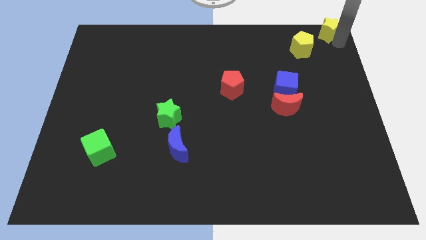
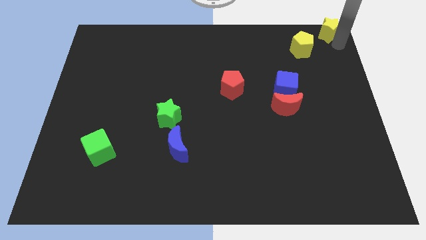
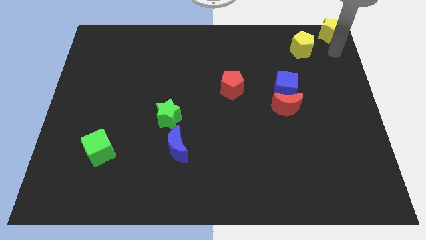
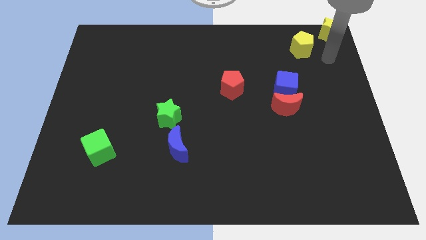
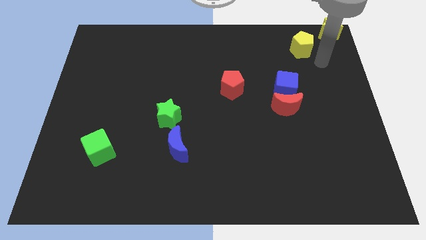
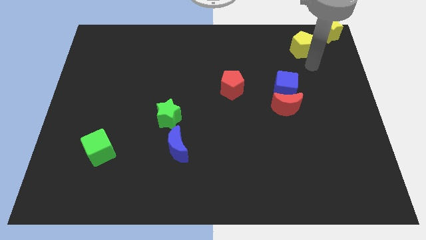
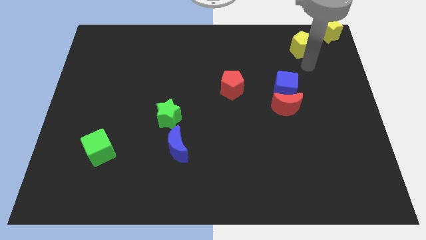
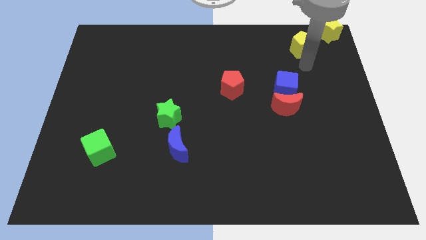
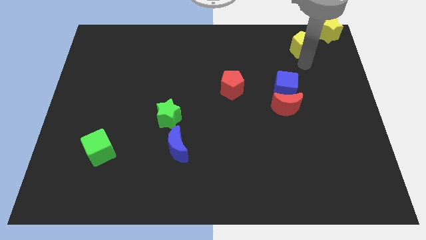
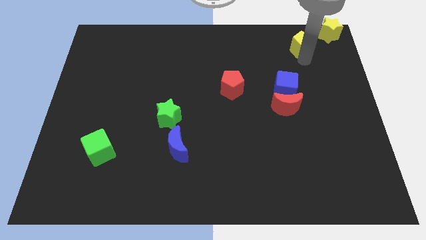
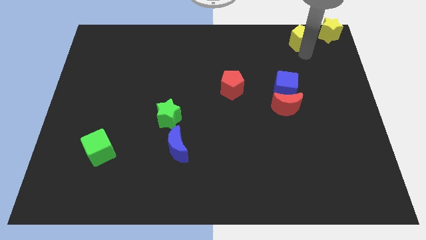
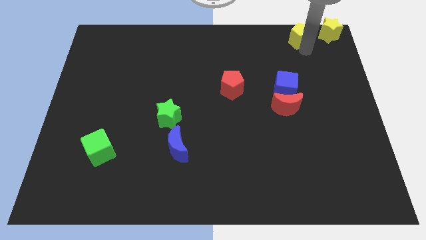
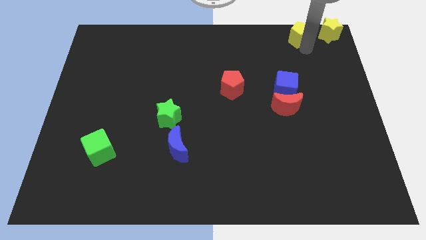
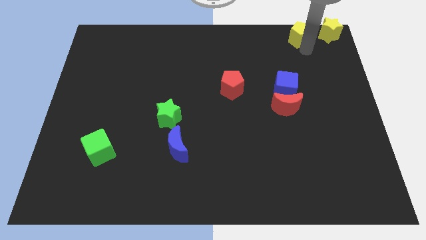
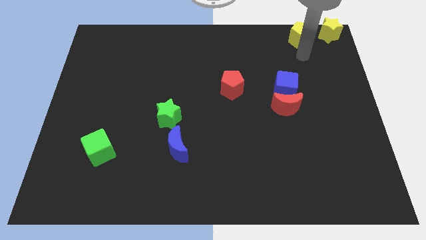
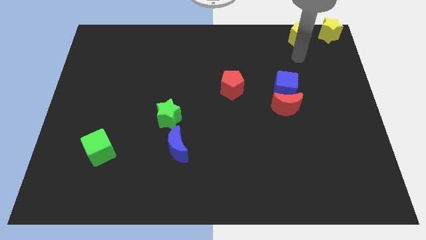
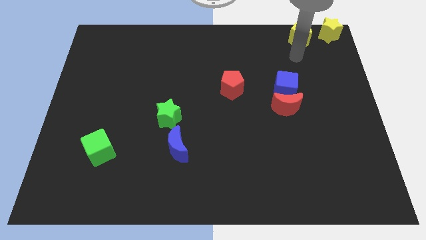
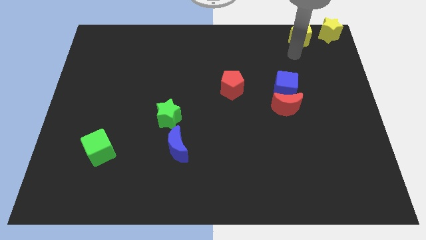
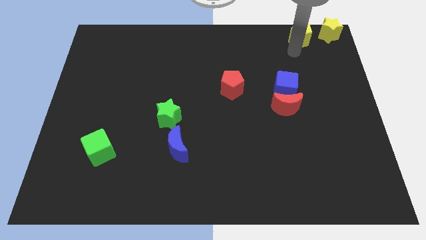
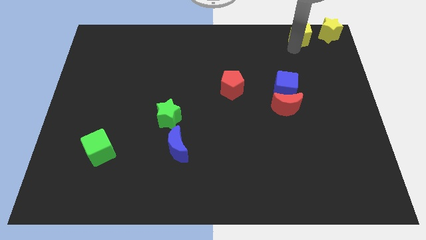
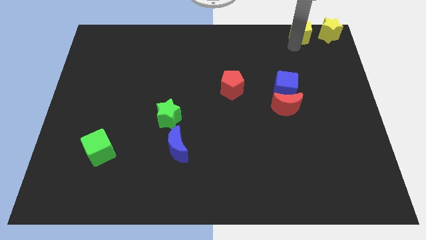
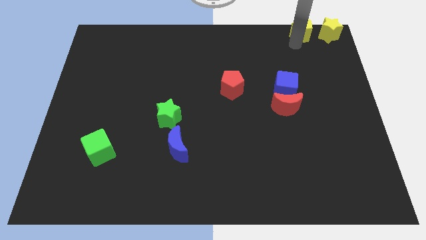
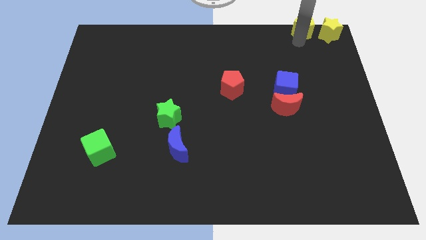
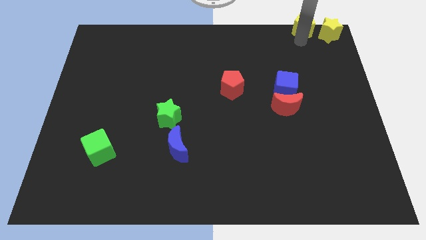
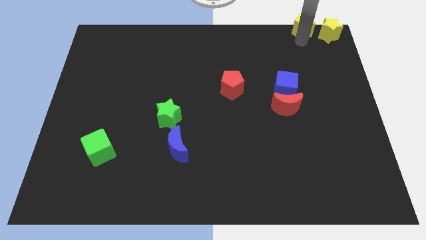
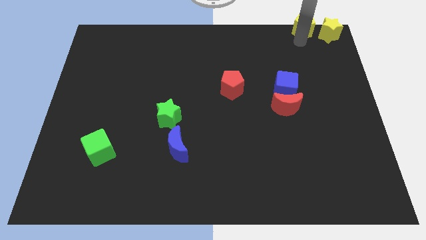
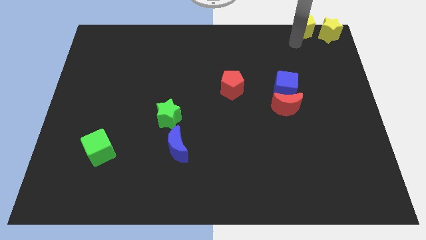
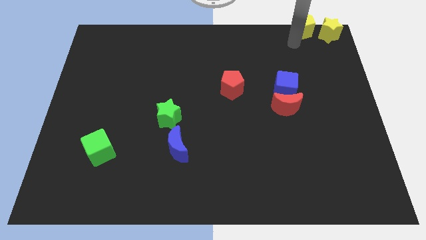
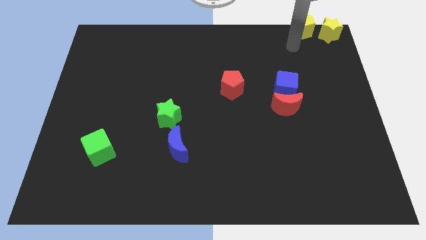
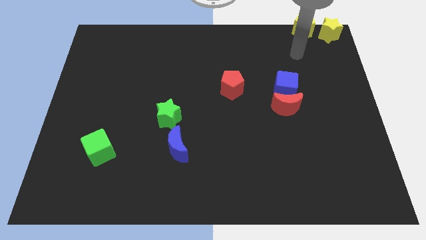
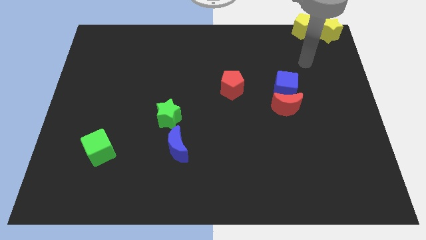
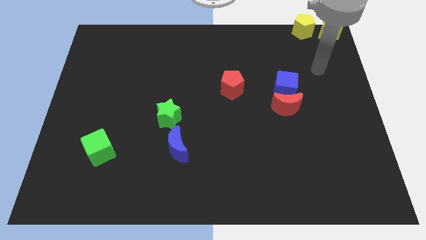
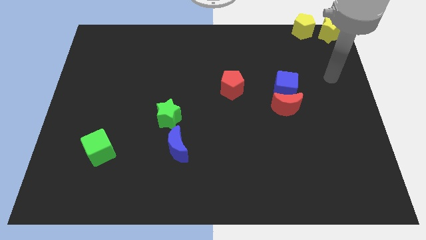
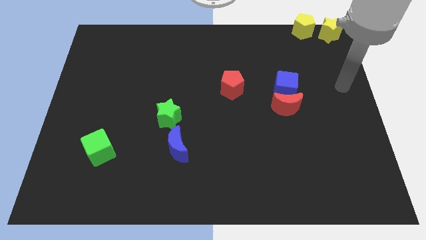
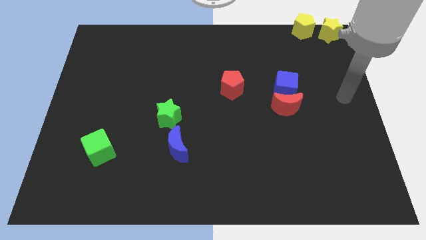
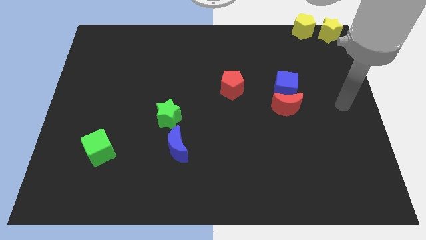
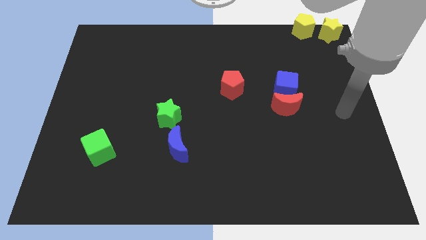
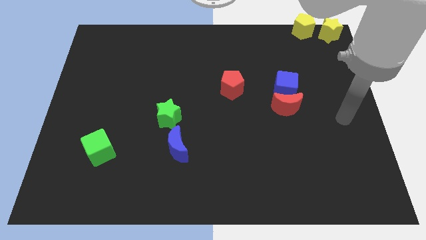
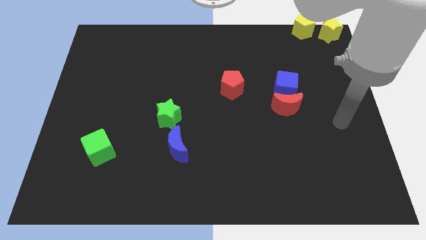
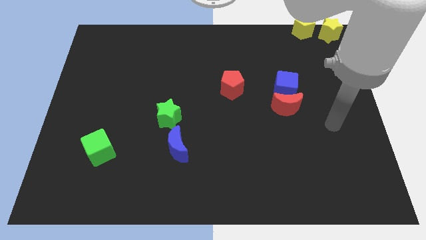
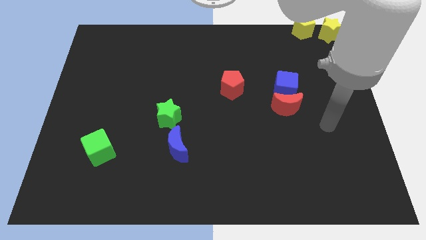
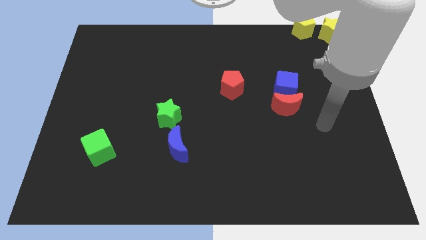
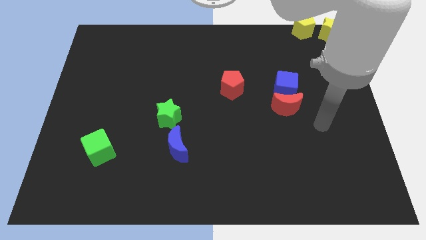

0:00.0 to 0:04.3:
place the yellow pentagon left to the yellow star

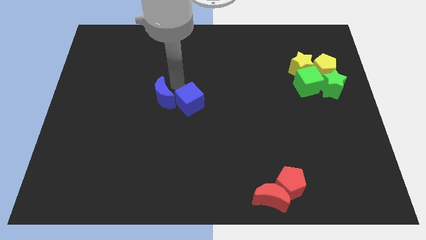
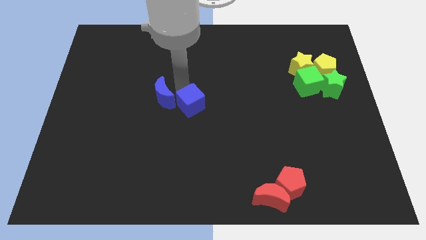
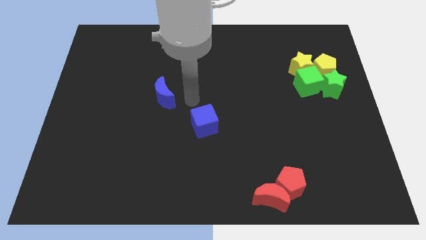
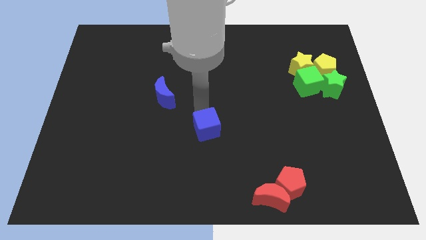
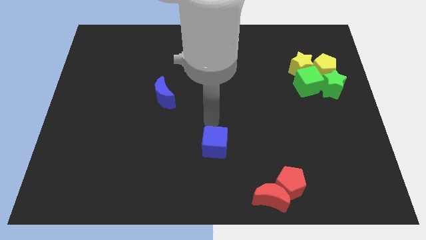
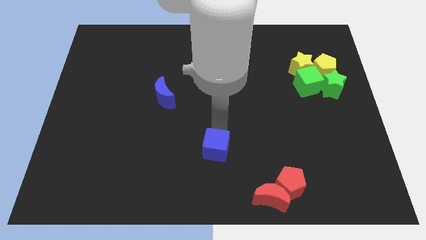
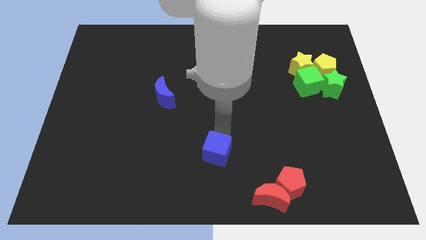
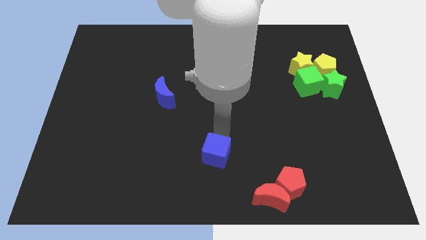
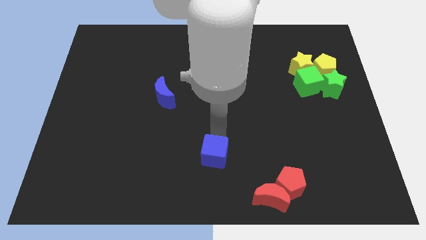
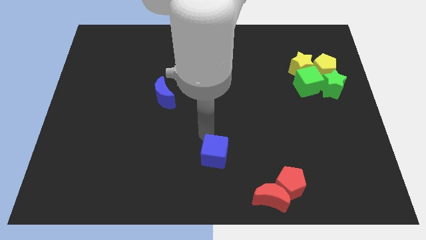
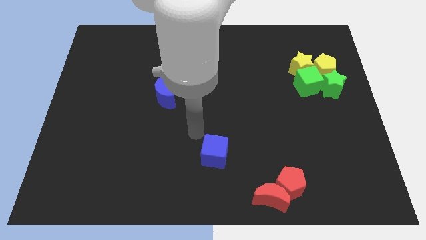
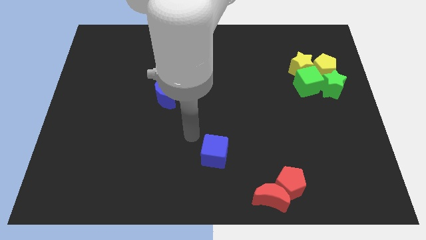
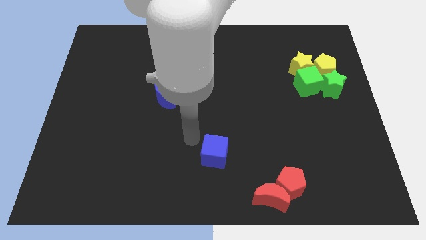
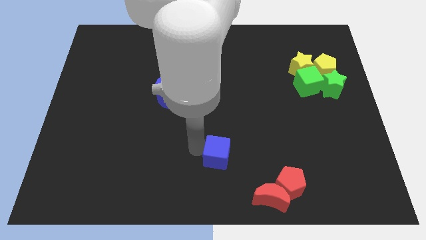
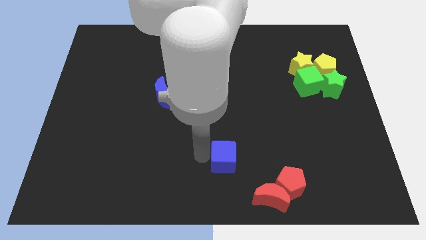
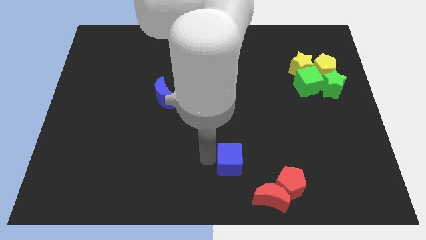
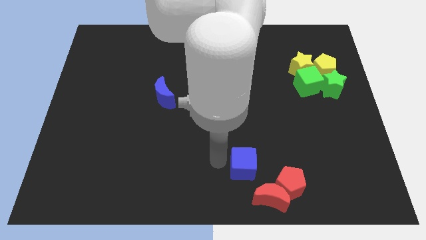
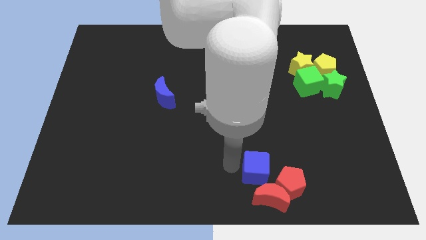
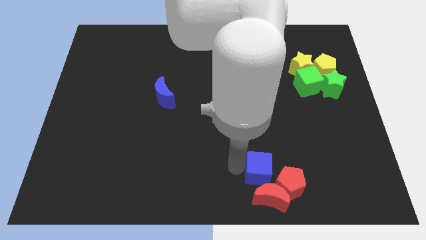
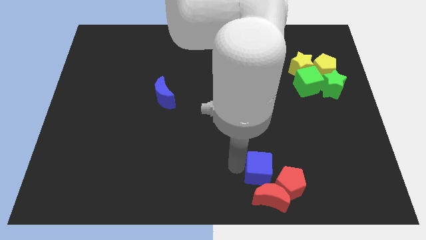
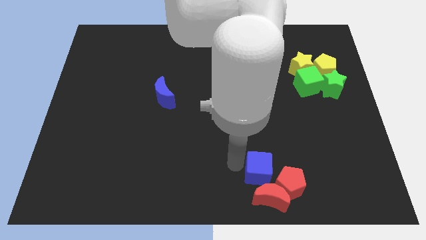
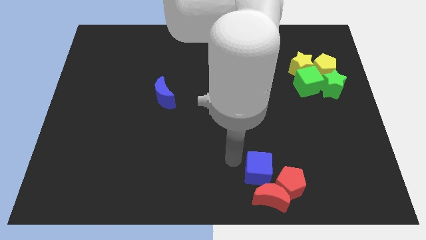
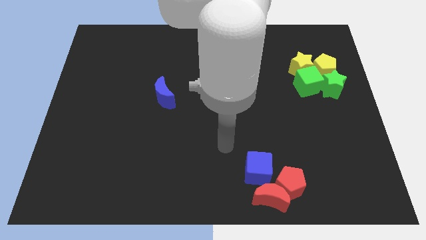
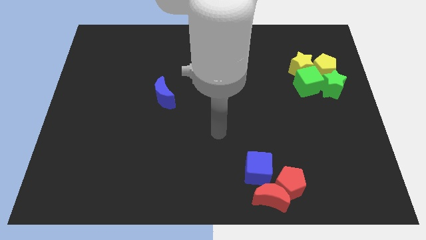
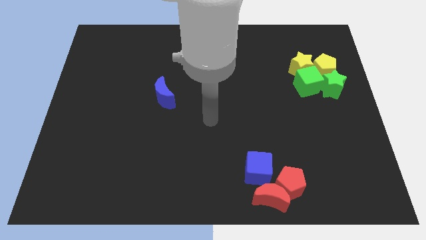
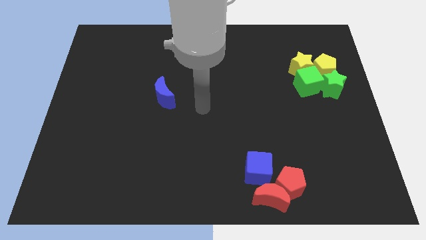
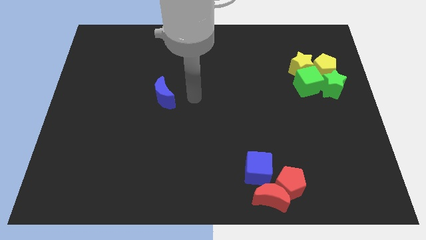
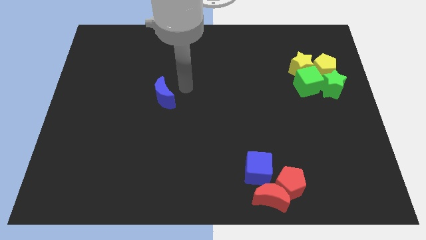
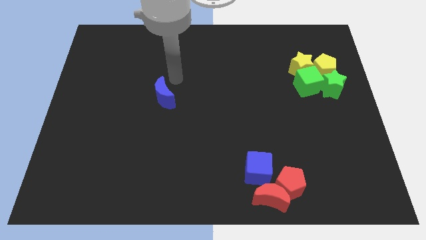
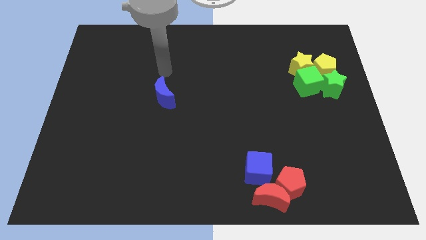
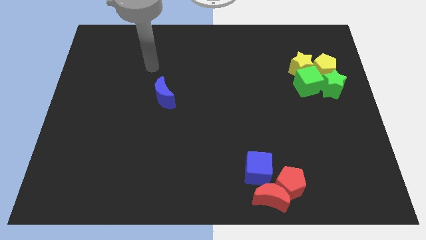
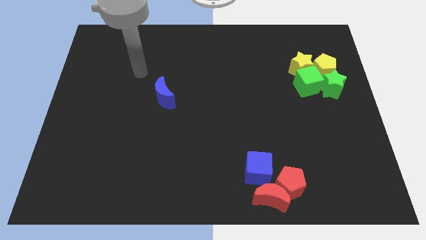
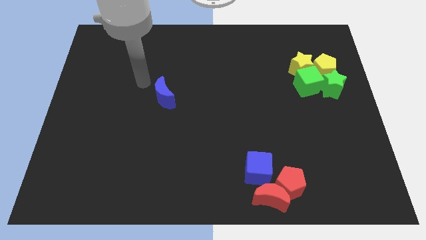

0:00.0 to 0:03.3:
place blue cube to the top of red crescent

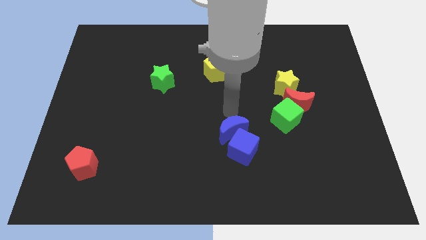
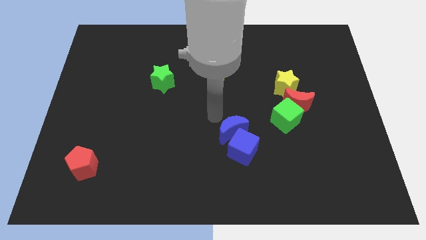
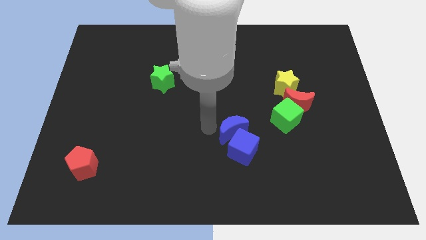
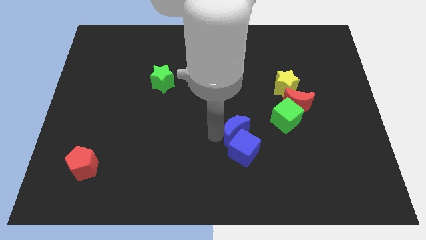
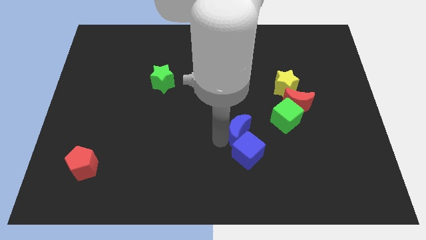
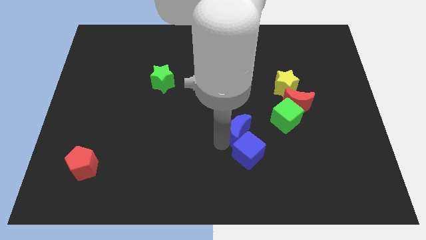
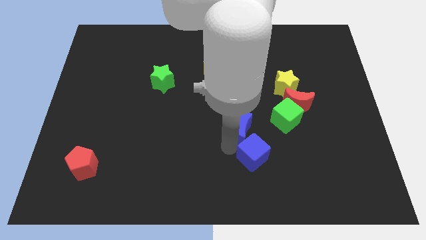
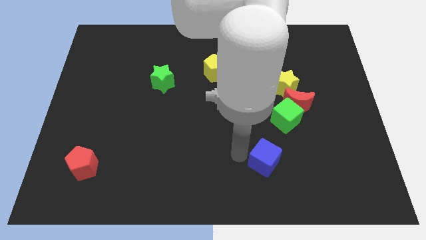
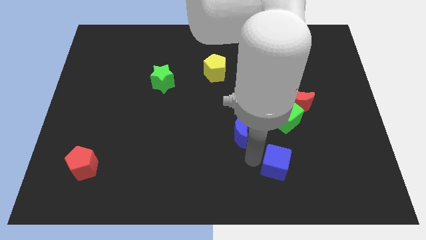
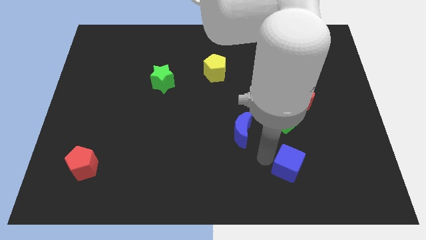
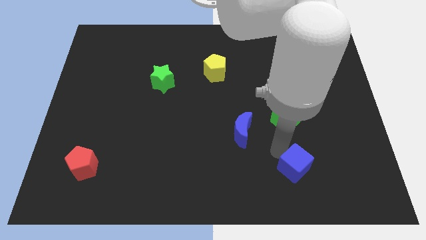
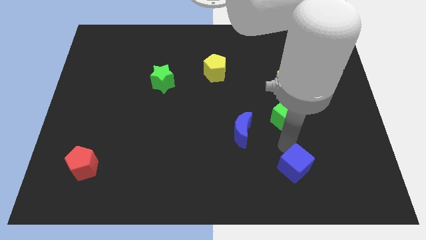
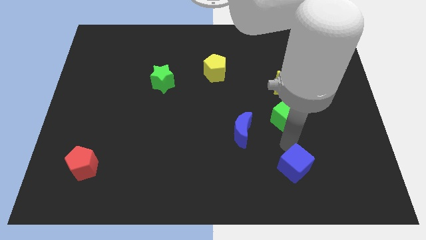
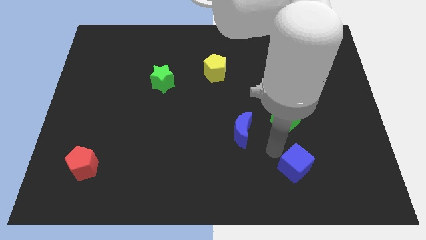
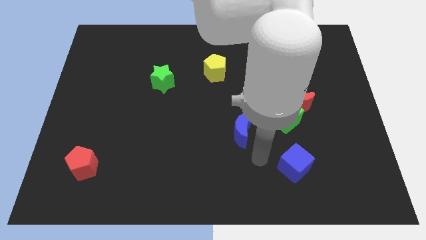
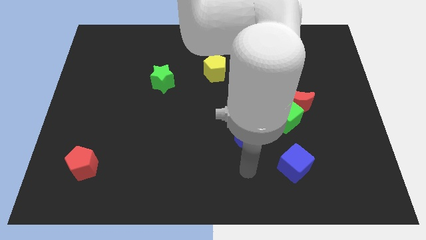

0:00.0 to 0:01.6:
separate the blue moon and the blue cube
